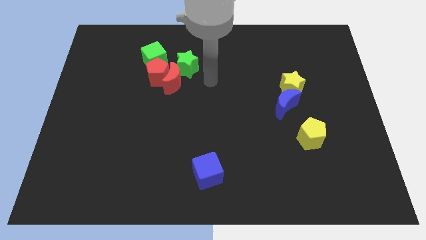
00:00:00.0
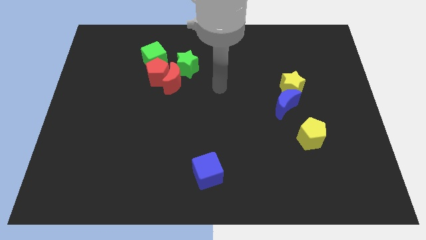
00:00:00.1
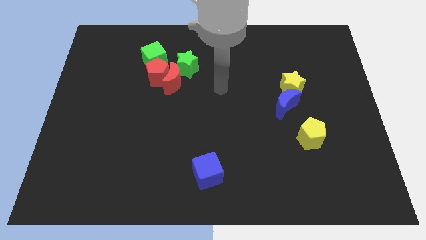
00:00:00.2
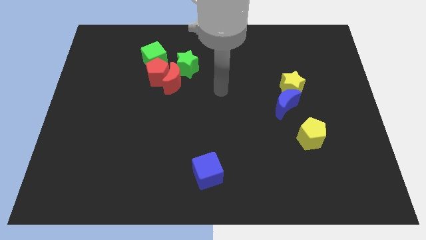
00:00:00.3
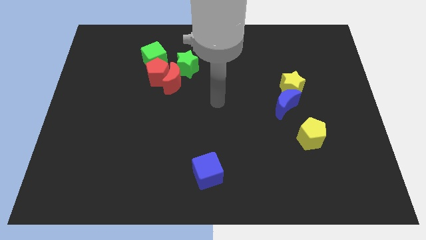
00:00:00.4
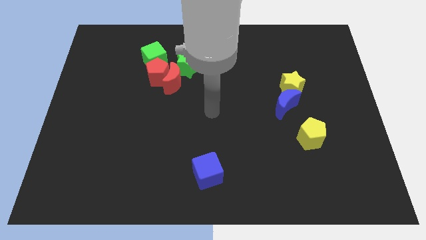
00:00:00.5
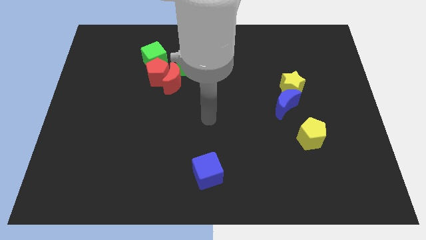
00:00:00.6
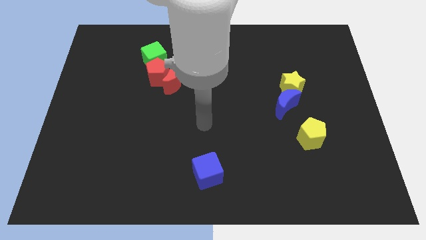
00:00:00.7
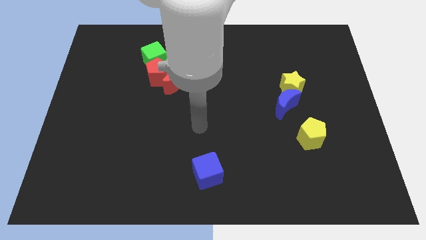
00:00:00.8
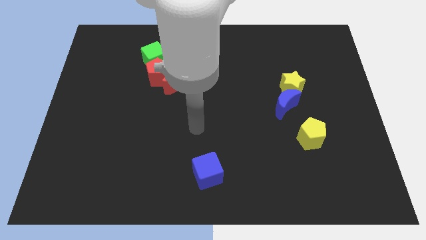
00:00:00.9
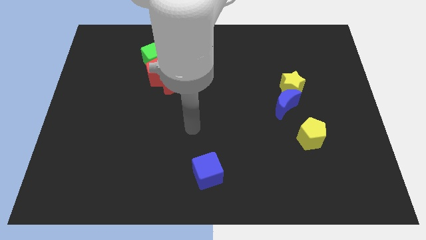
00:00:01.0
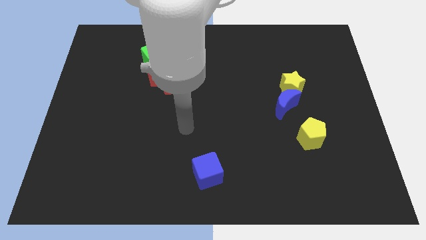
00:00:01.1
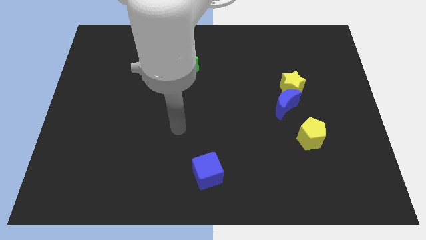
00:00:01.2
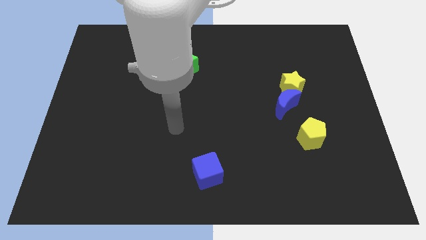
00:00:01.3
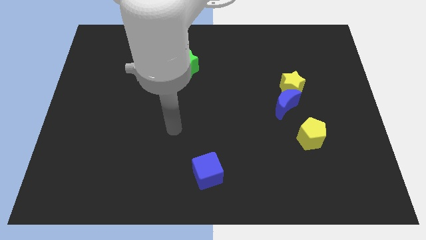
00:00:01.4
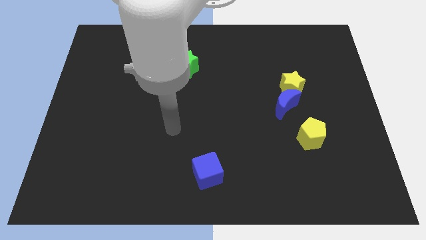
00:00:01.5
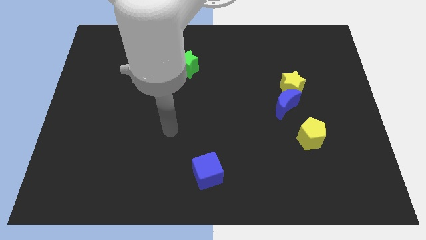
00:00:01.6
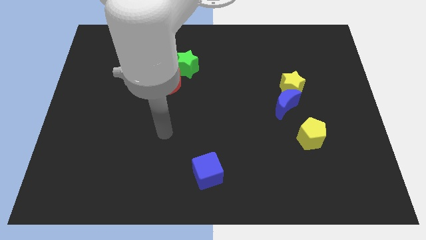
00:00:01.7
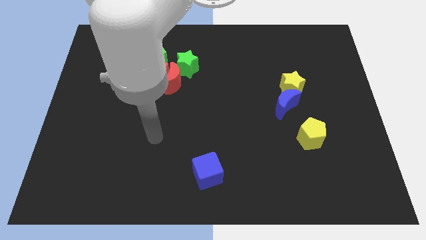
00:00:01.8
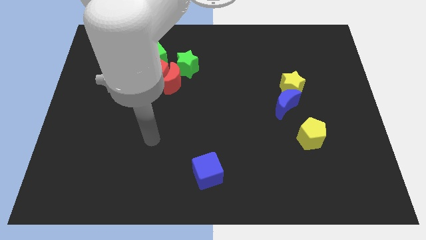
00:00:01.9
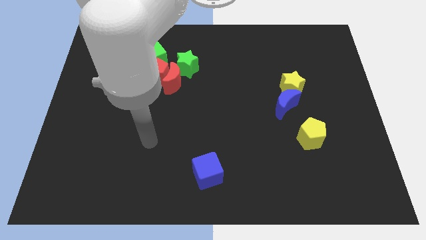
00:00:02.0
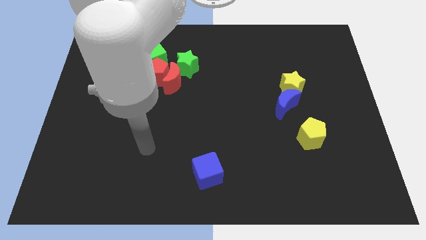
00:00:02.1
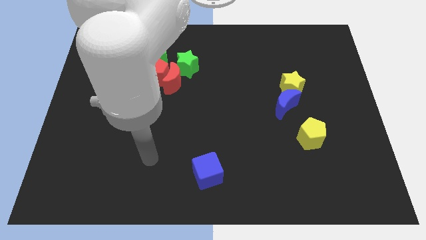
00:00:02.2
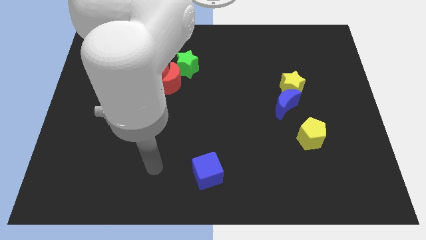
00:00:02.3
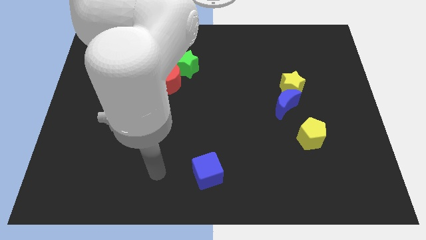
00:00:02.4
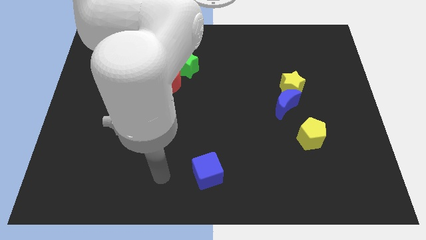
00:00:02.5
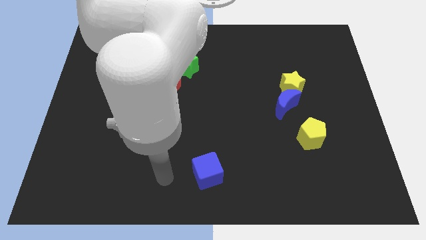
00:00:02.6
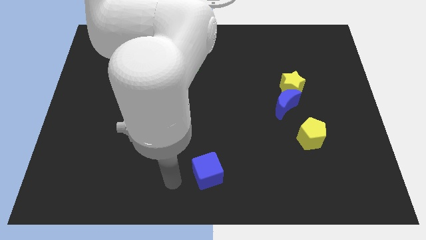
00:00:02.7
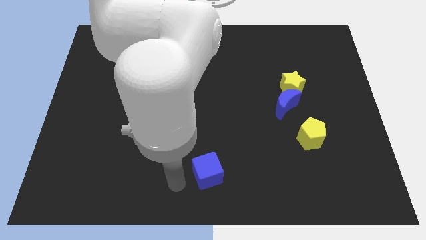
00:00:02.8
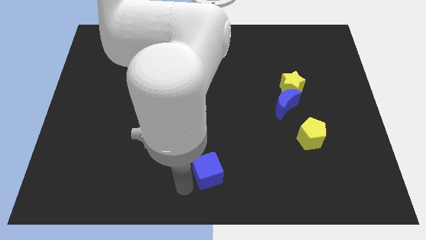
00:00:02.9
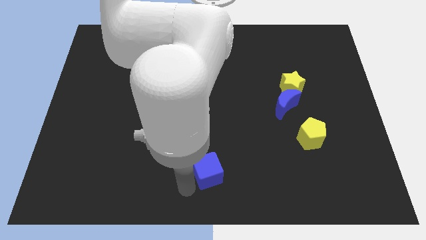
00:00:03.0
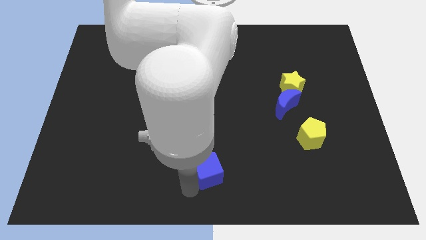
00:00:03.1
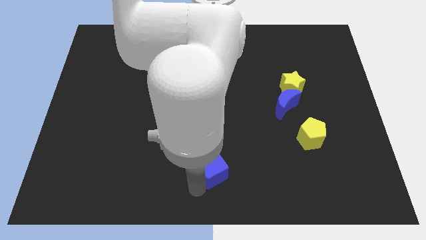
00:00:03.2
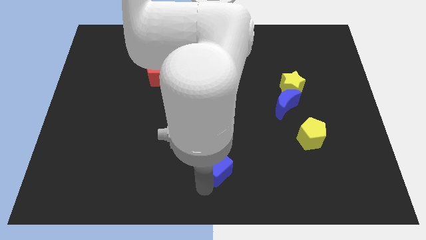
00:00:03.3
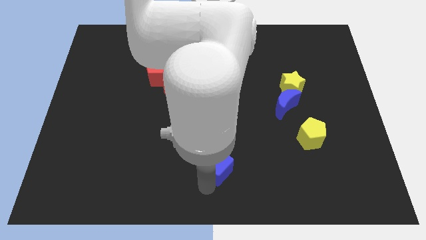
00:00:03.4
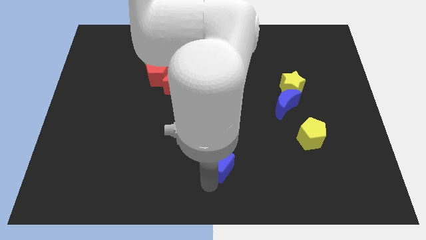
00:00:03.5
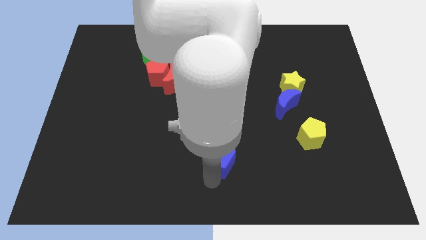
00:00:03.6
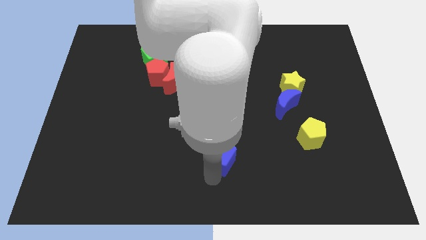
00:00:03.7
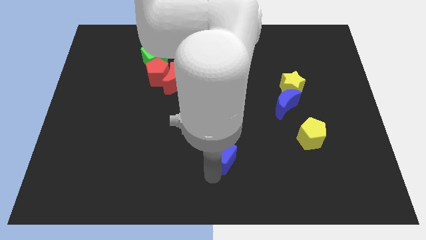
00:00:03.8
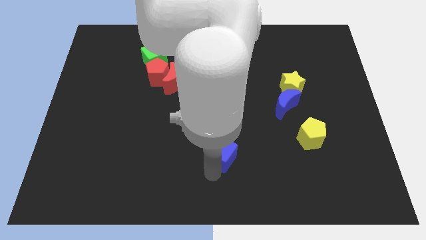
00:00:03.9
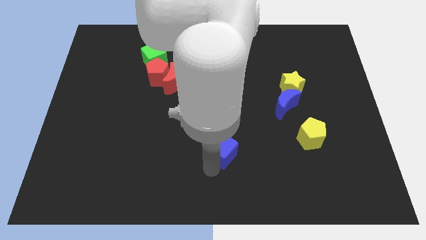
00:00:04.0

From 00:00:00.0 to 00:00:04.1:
slide the blue cube towards the center

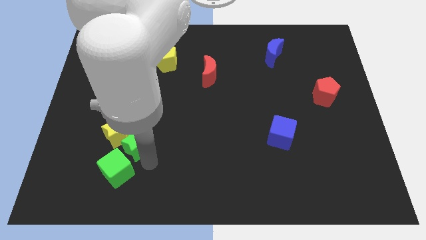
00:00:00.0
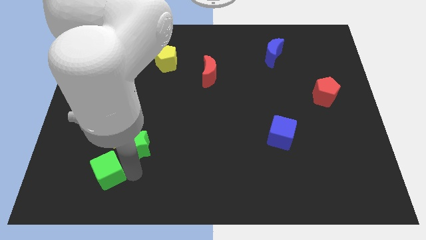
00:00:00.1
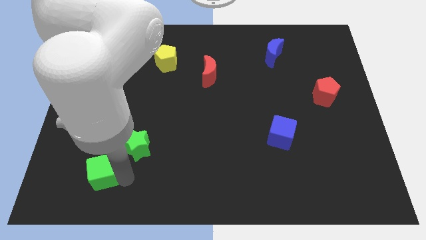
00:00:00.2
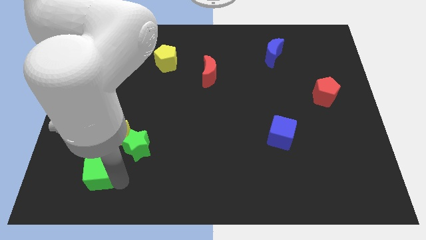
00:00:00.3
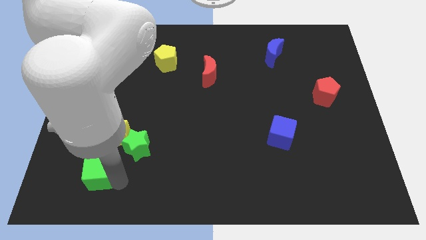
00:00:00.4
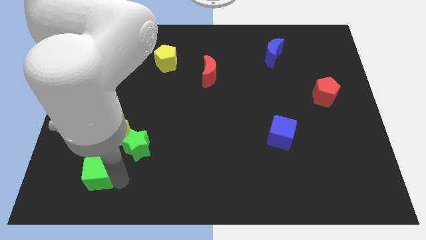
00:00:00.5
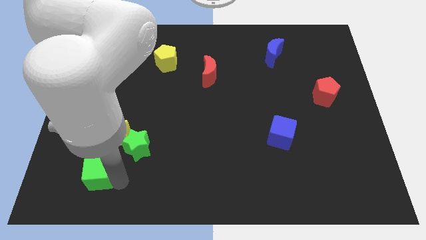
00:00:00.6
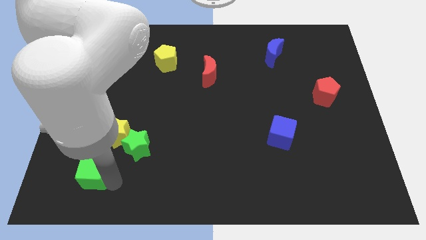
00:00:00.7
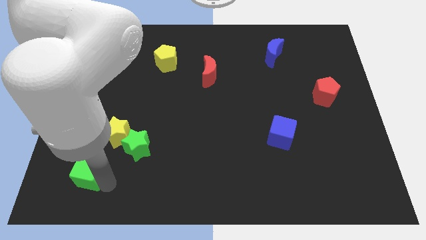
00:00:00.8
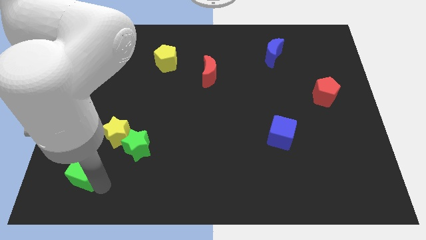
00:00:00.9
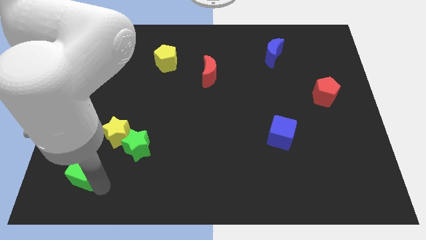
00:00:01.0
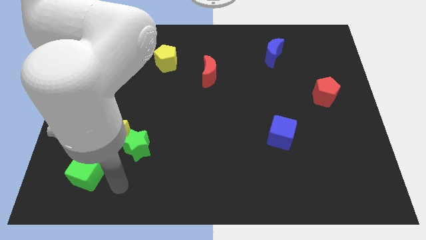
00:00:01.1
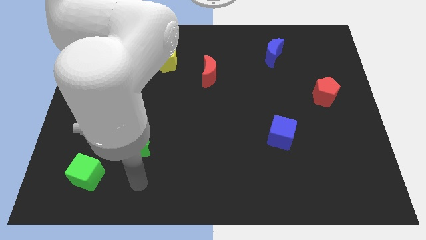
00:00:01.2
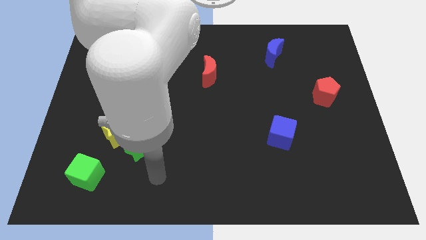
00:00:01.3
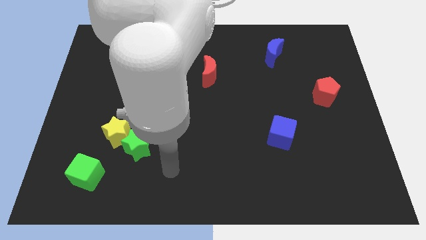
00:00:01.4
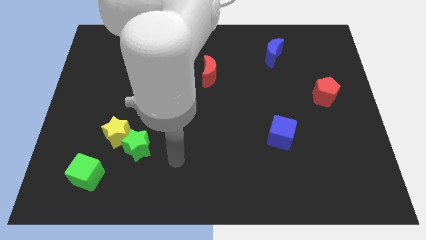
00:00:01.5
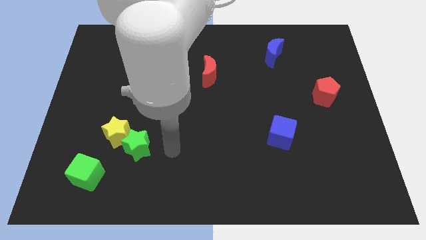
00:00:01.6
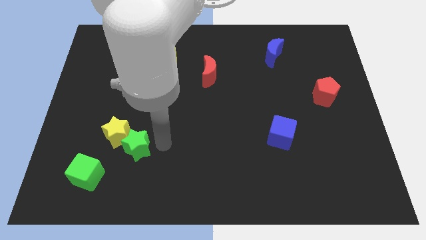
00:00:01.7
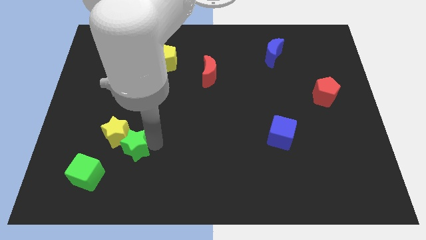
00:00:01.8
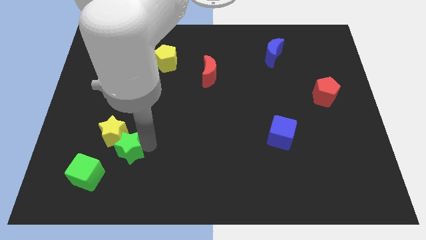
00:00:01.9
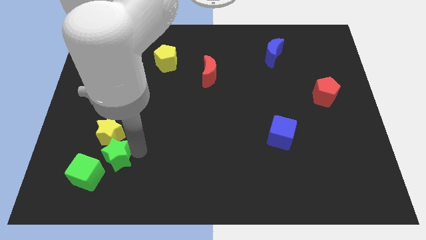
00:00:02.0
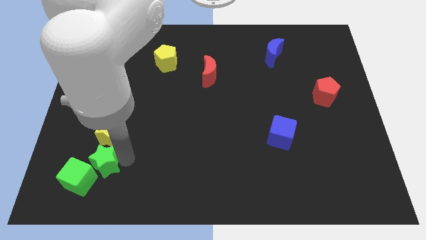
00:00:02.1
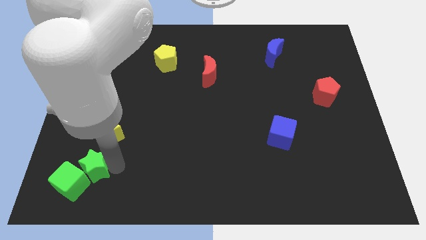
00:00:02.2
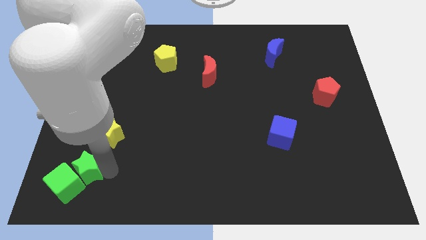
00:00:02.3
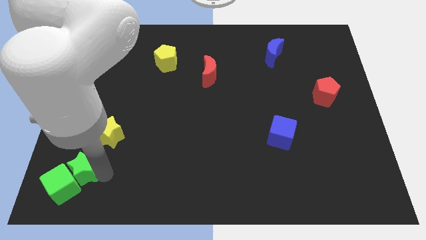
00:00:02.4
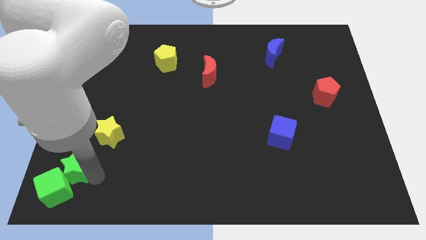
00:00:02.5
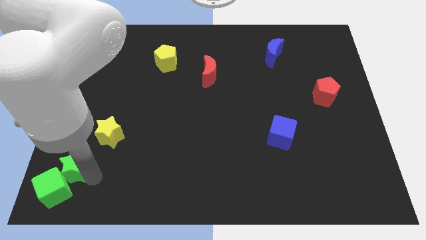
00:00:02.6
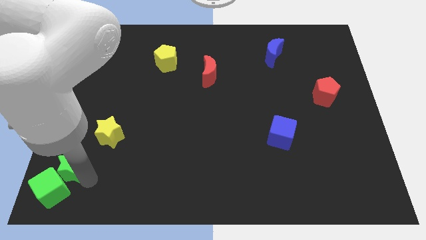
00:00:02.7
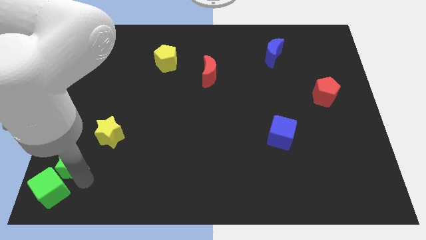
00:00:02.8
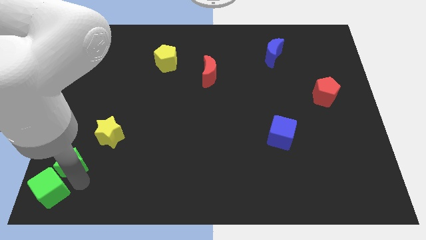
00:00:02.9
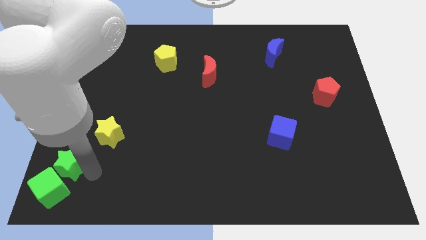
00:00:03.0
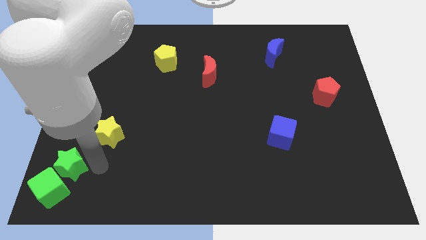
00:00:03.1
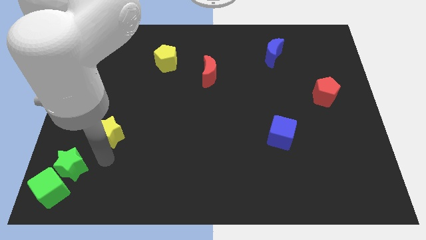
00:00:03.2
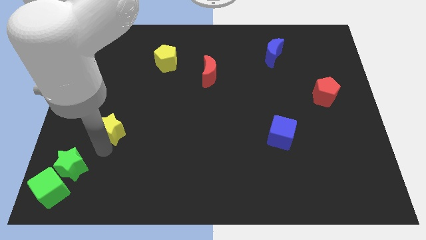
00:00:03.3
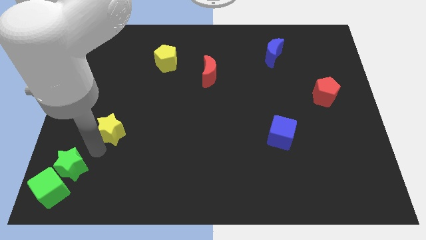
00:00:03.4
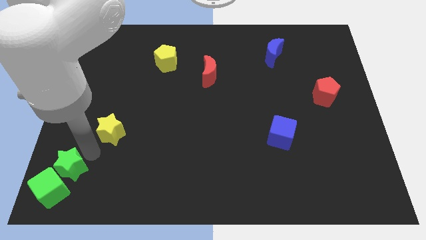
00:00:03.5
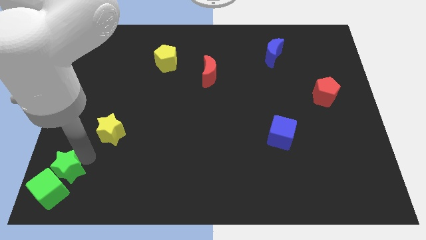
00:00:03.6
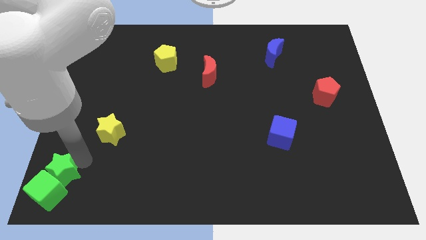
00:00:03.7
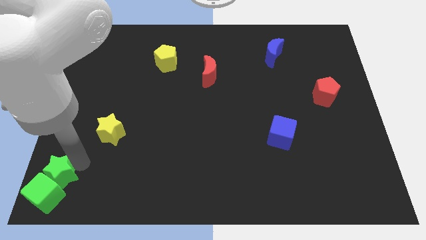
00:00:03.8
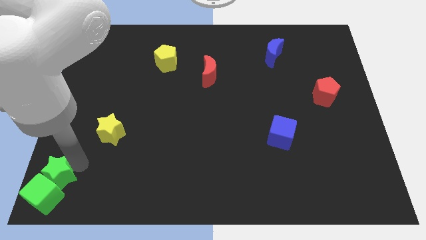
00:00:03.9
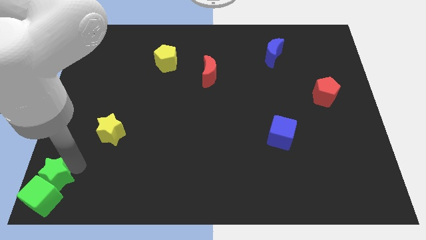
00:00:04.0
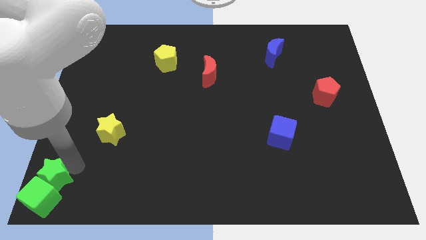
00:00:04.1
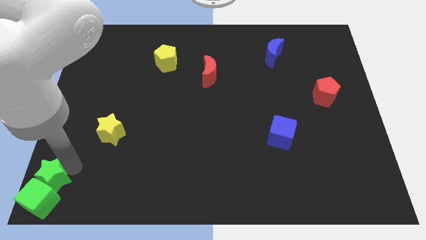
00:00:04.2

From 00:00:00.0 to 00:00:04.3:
push the green blocks together to the bottom left corner of the board

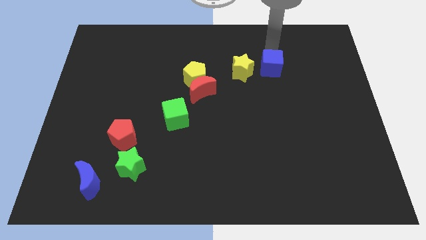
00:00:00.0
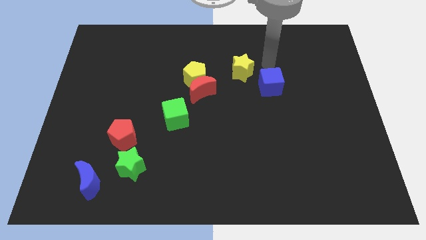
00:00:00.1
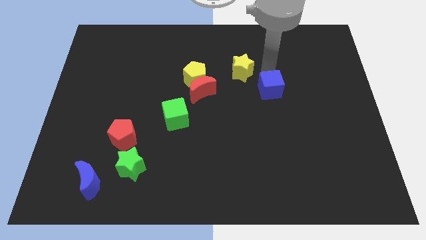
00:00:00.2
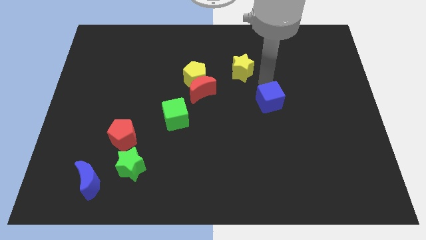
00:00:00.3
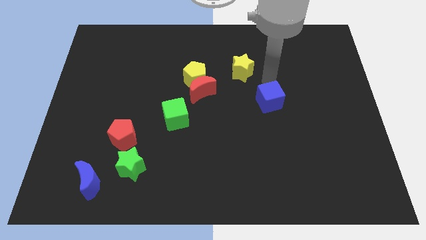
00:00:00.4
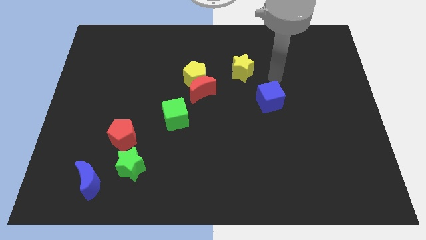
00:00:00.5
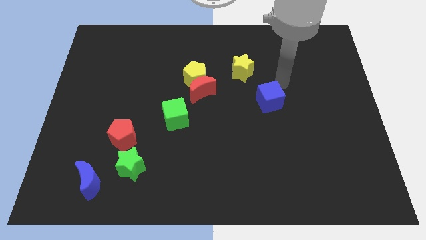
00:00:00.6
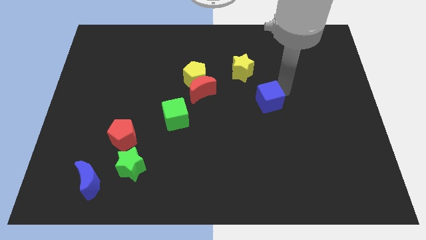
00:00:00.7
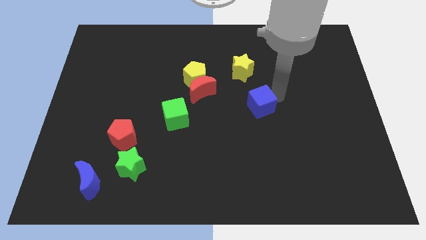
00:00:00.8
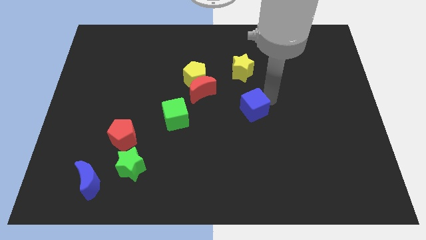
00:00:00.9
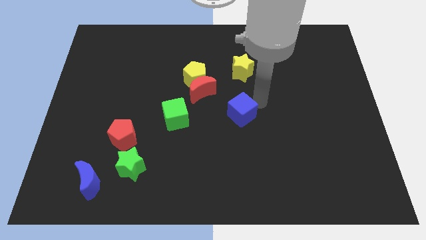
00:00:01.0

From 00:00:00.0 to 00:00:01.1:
put the blue cube vertically below the yellow star
